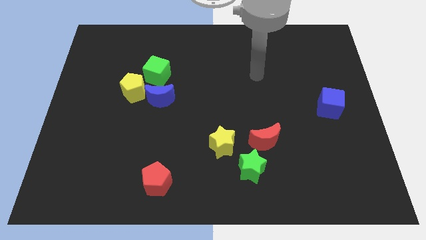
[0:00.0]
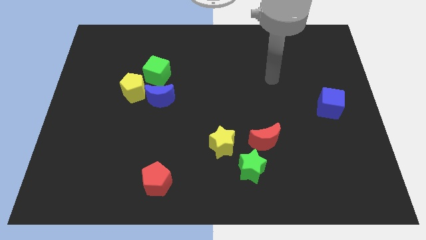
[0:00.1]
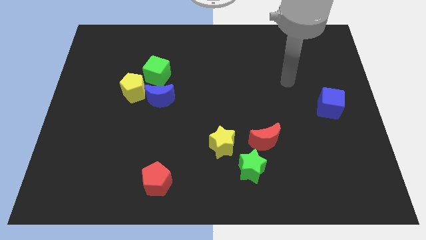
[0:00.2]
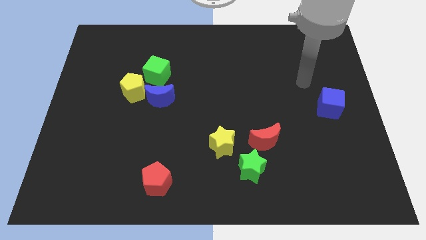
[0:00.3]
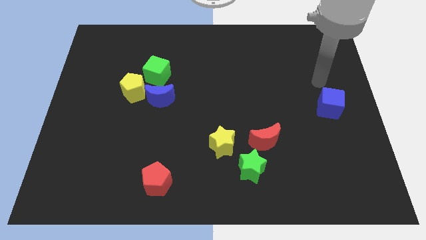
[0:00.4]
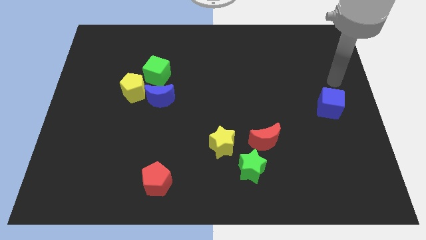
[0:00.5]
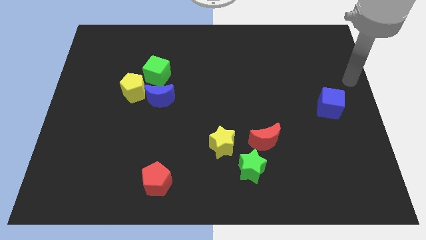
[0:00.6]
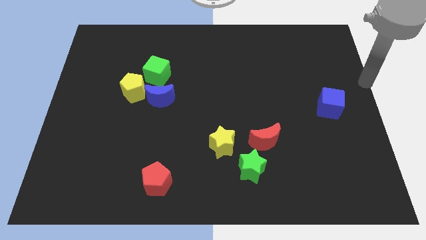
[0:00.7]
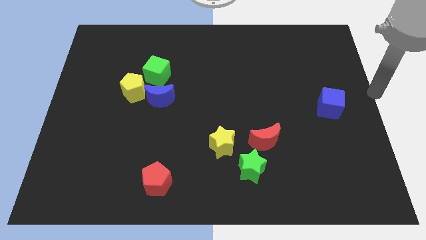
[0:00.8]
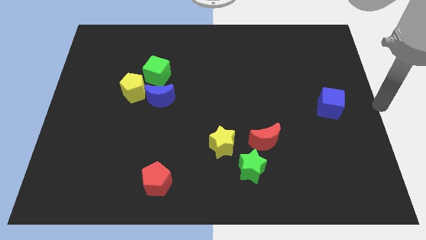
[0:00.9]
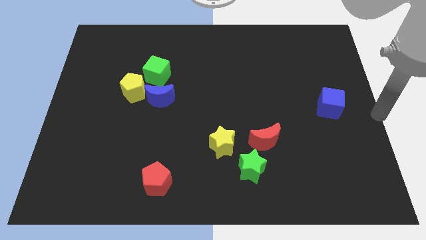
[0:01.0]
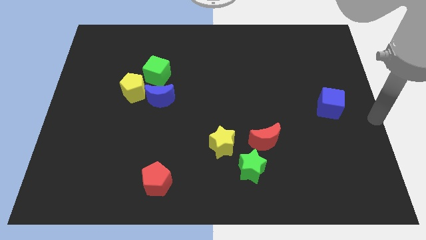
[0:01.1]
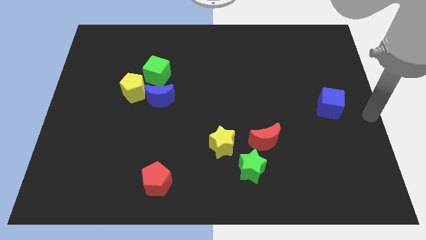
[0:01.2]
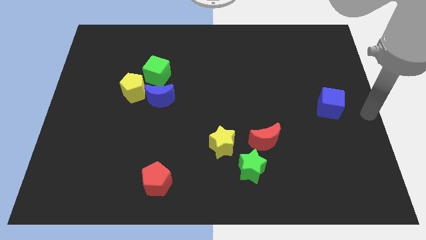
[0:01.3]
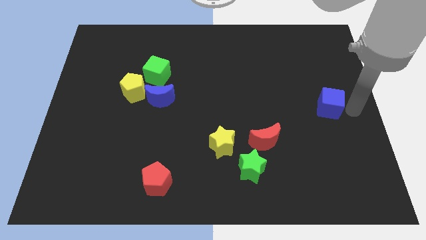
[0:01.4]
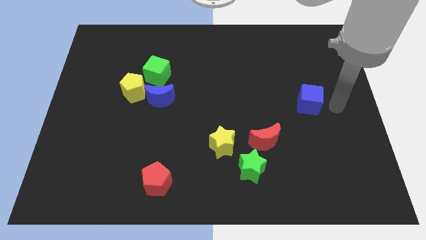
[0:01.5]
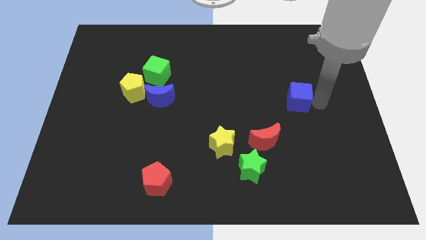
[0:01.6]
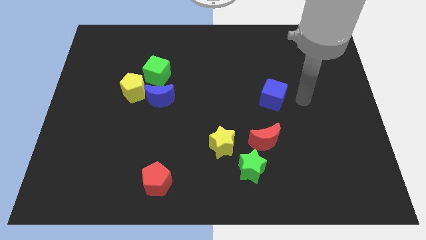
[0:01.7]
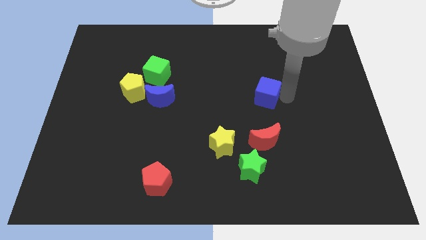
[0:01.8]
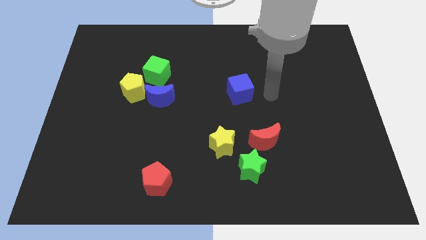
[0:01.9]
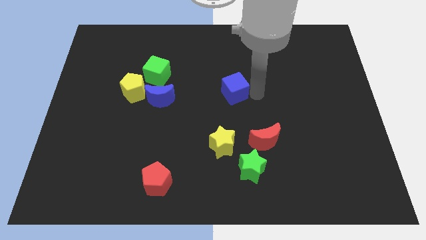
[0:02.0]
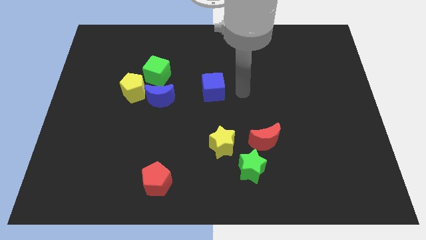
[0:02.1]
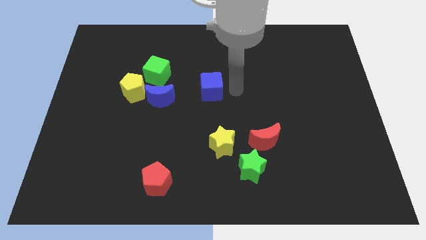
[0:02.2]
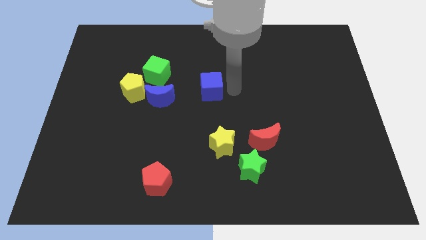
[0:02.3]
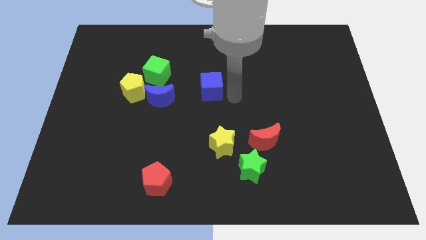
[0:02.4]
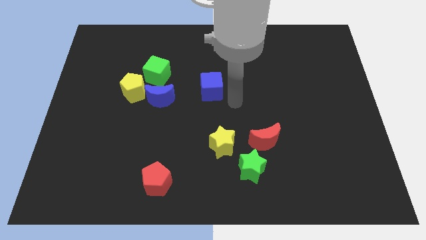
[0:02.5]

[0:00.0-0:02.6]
place blue cube parallel to the yellow star

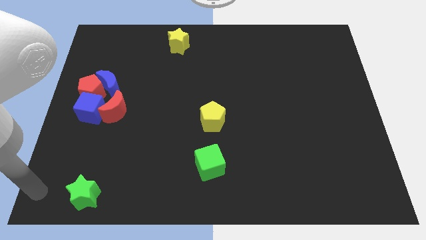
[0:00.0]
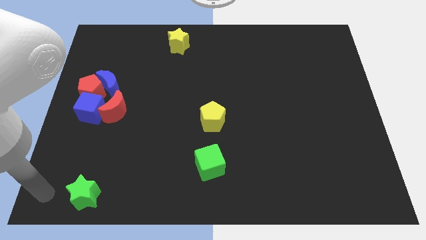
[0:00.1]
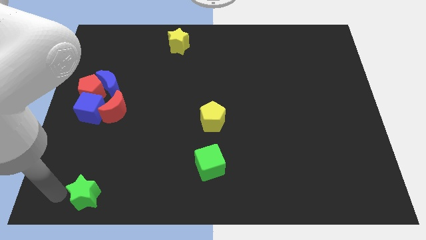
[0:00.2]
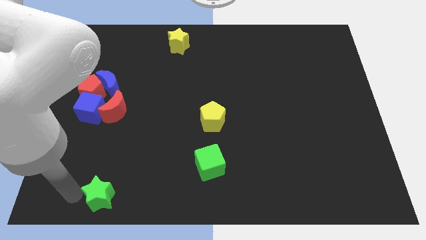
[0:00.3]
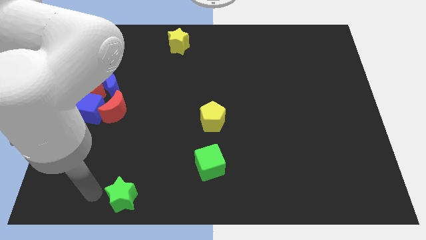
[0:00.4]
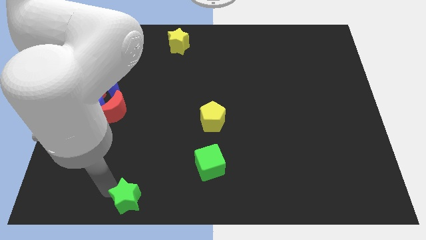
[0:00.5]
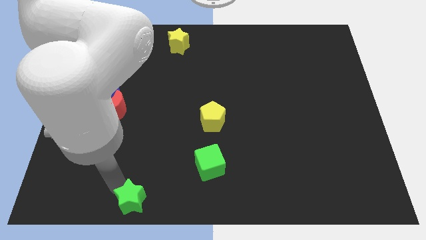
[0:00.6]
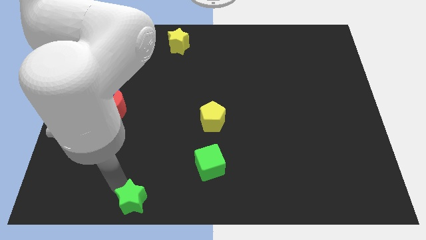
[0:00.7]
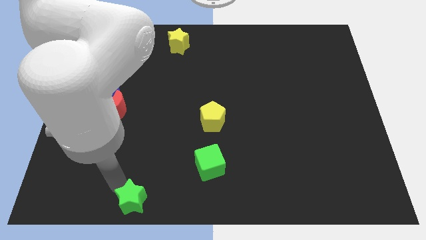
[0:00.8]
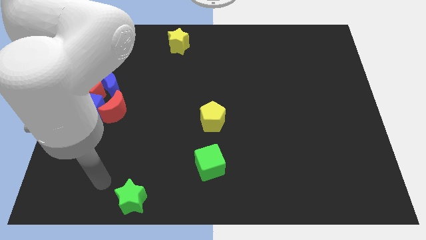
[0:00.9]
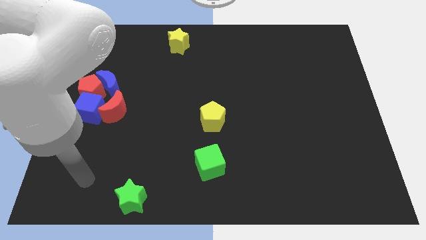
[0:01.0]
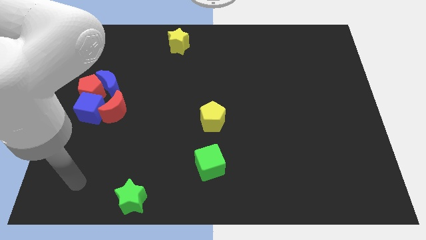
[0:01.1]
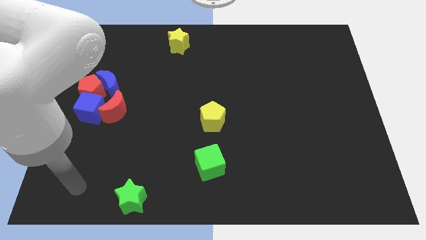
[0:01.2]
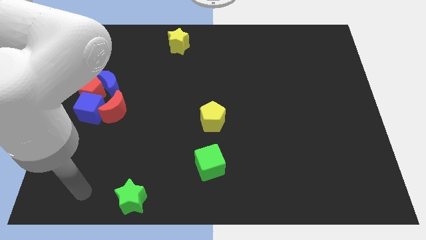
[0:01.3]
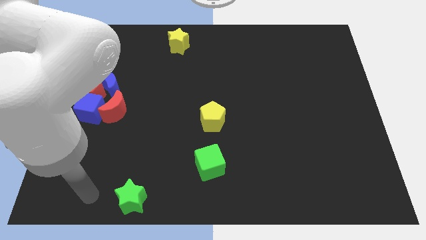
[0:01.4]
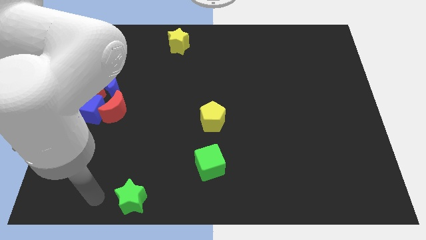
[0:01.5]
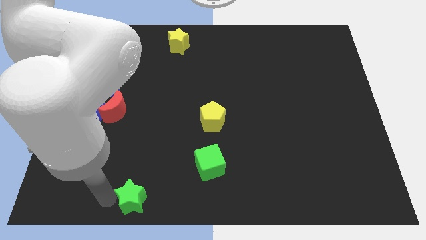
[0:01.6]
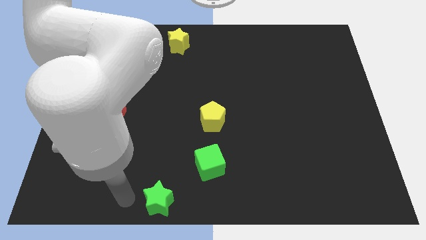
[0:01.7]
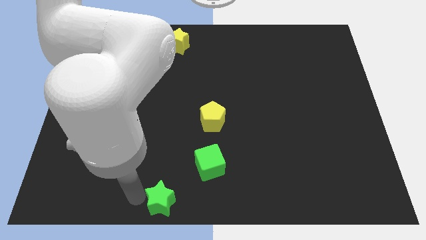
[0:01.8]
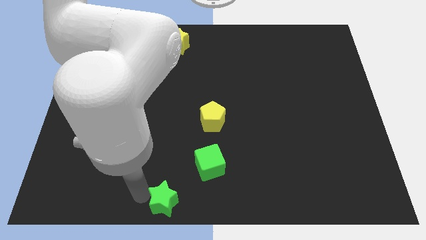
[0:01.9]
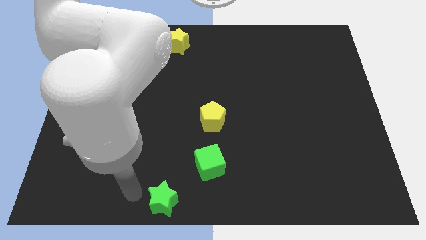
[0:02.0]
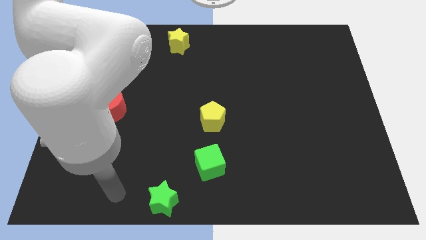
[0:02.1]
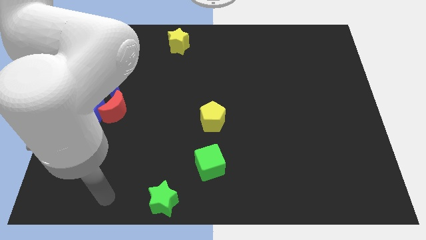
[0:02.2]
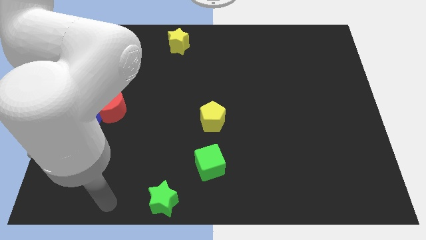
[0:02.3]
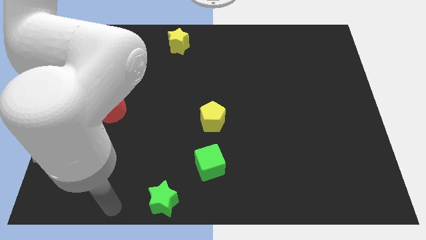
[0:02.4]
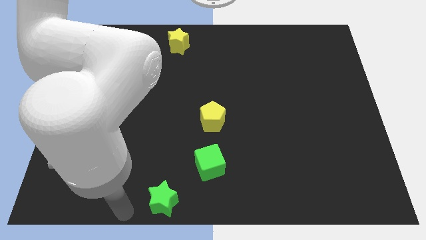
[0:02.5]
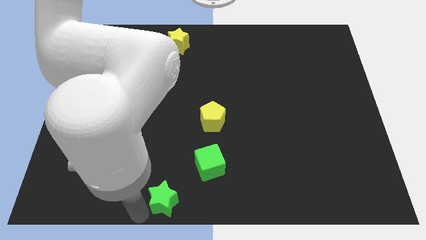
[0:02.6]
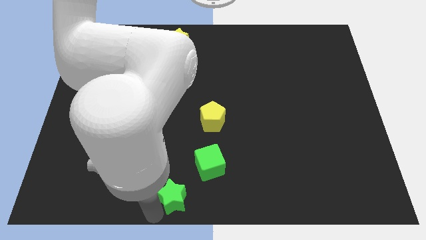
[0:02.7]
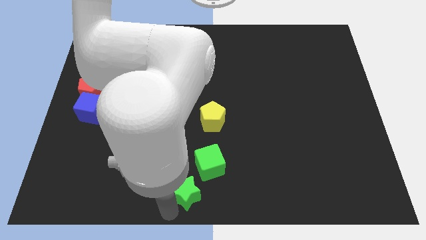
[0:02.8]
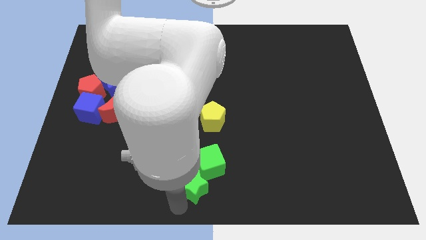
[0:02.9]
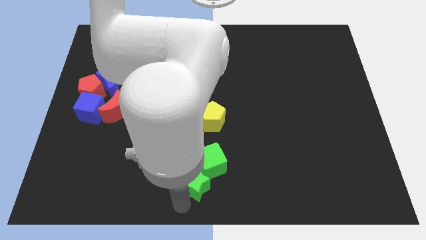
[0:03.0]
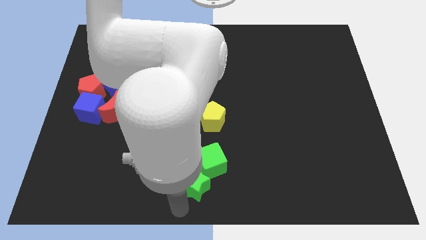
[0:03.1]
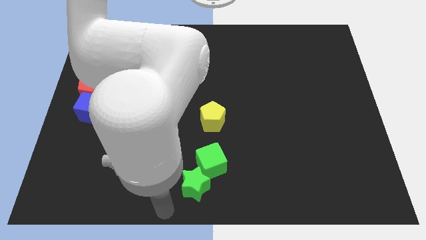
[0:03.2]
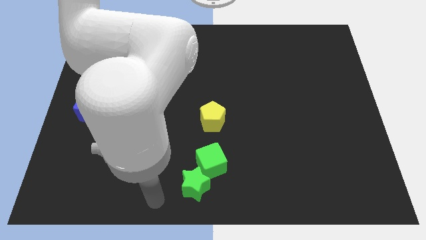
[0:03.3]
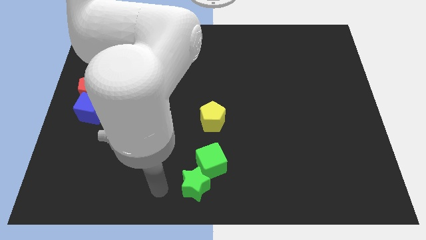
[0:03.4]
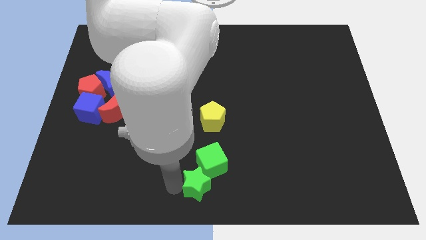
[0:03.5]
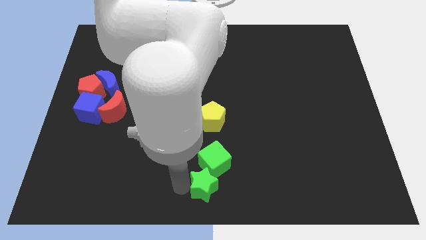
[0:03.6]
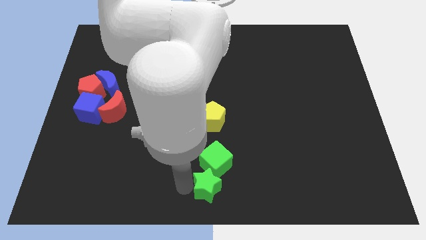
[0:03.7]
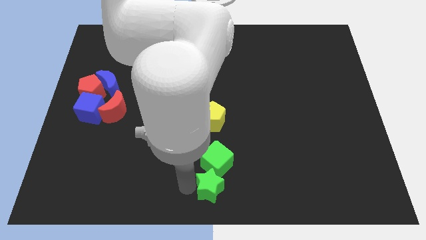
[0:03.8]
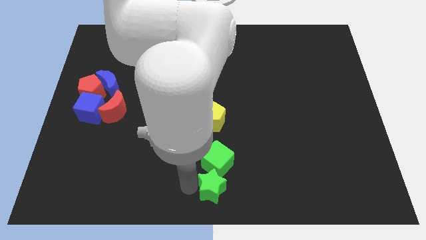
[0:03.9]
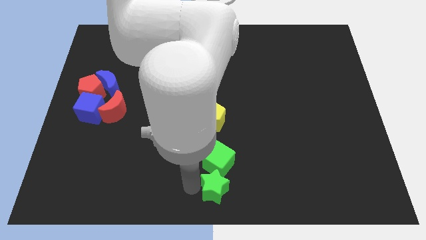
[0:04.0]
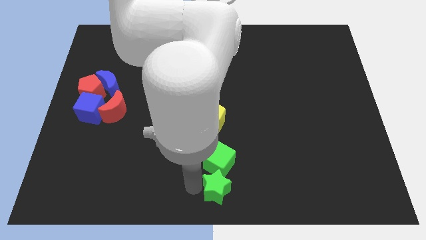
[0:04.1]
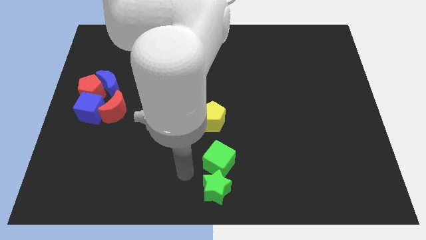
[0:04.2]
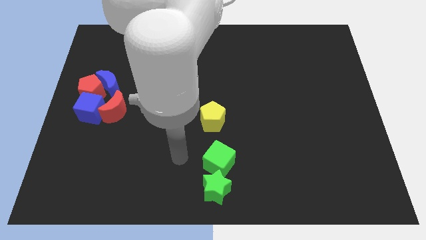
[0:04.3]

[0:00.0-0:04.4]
place the green star below the green cube

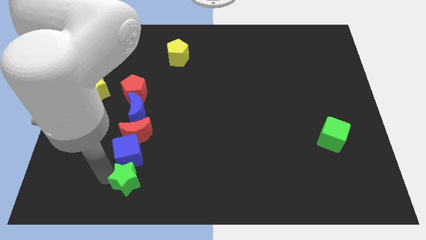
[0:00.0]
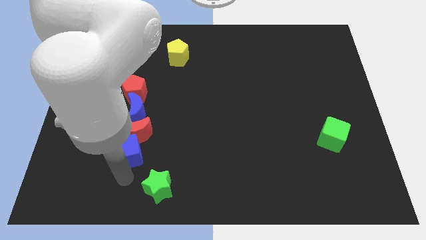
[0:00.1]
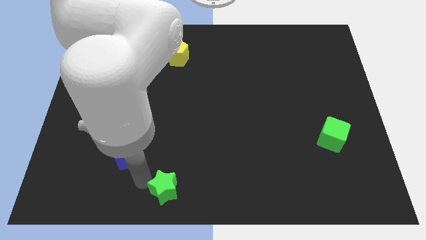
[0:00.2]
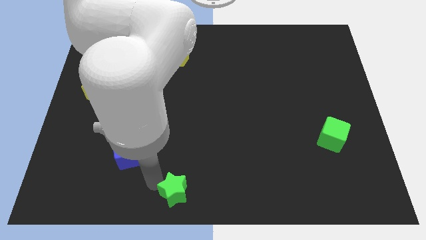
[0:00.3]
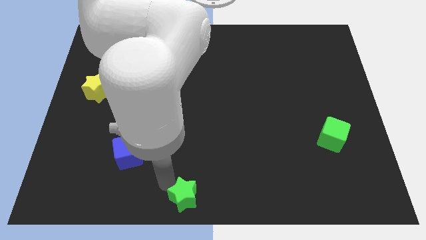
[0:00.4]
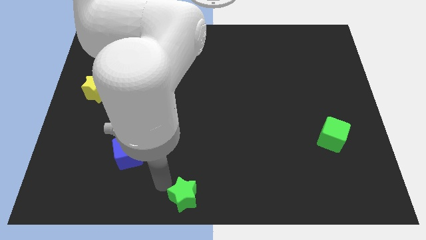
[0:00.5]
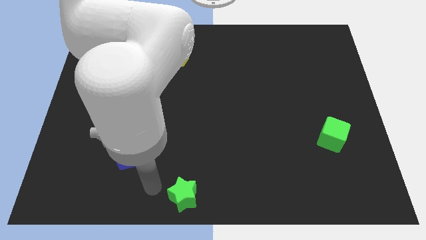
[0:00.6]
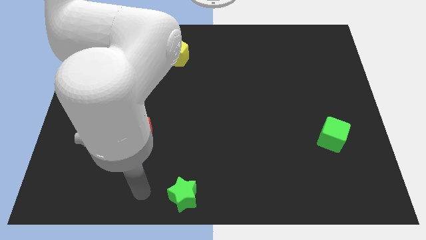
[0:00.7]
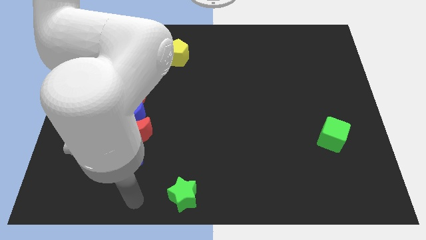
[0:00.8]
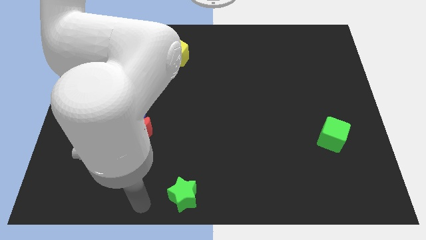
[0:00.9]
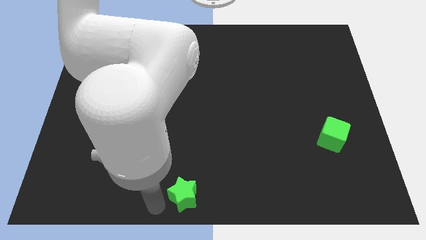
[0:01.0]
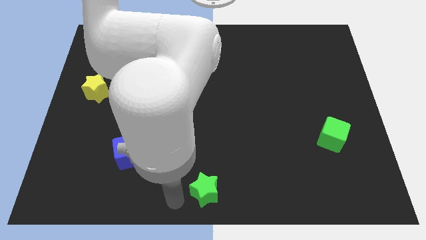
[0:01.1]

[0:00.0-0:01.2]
move the green star to the center bottom of the board

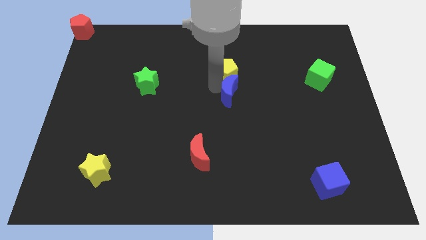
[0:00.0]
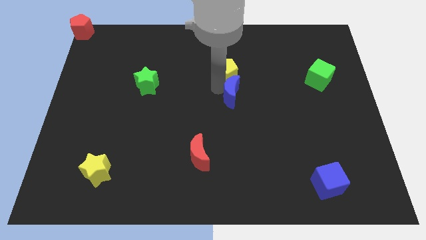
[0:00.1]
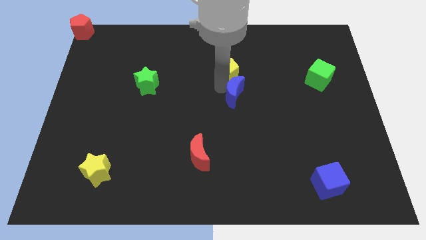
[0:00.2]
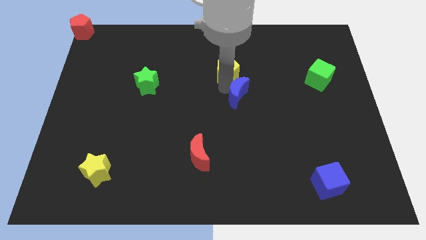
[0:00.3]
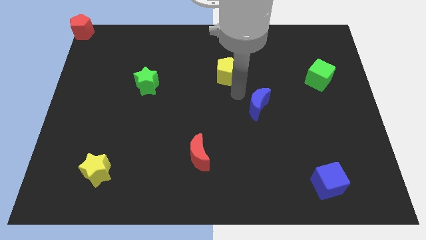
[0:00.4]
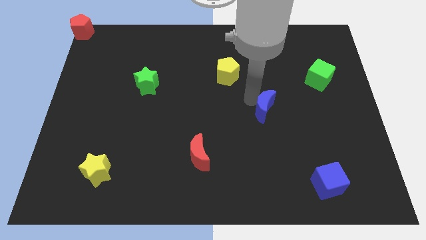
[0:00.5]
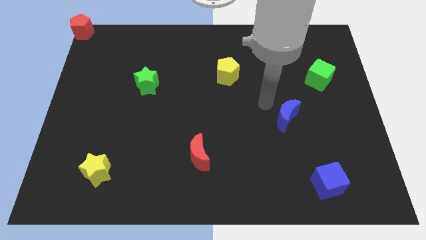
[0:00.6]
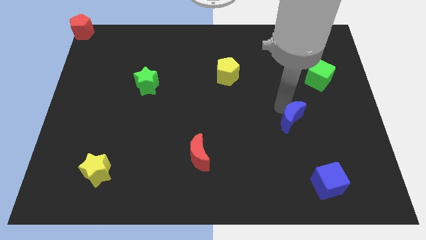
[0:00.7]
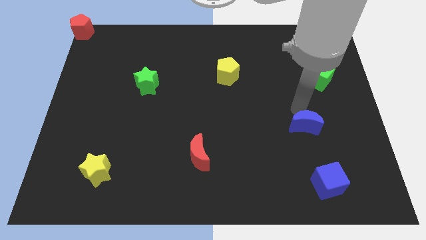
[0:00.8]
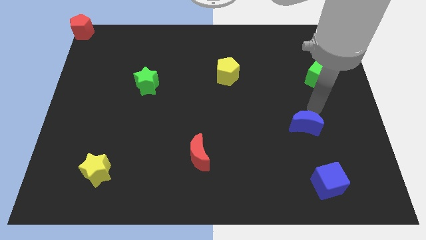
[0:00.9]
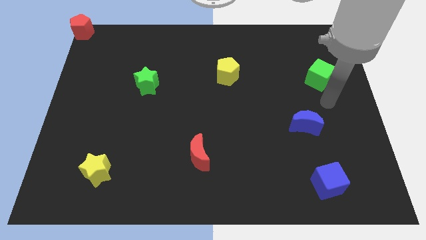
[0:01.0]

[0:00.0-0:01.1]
separate blue crescent from yellow pentagon
